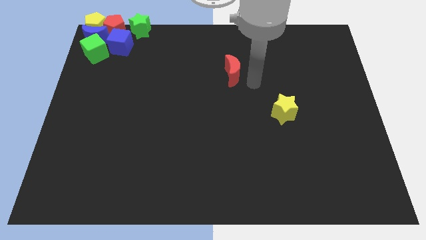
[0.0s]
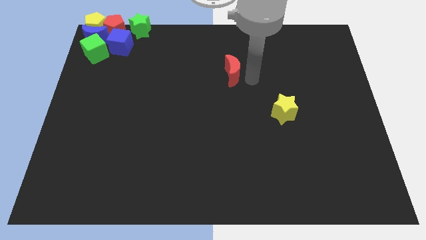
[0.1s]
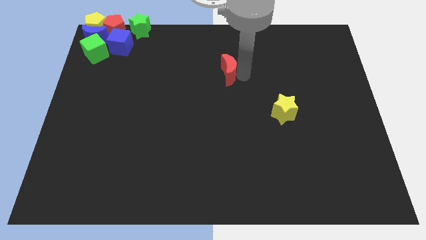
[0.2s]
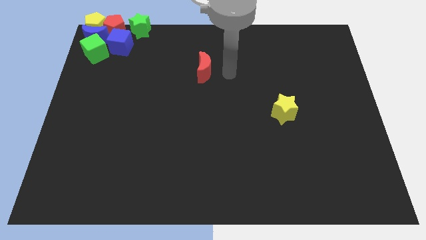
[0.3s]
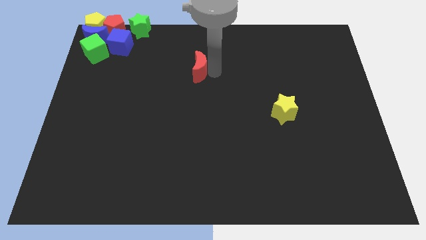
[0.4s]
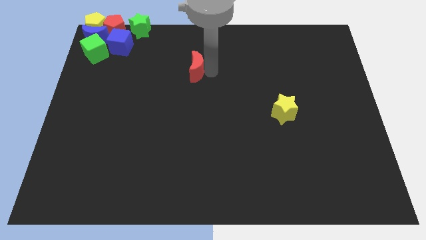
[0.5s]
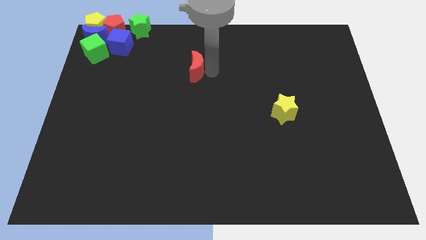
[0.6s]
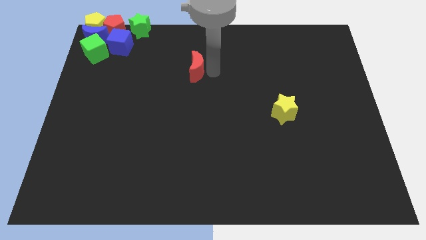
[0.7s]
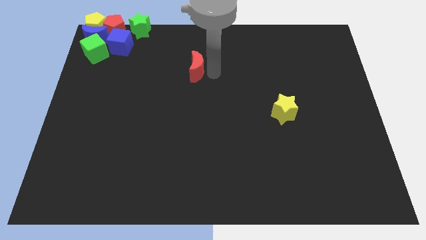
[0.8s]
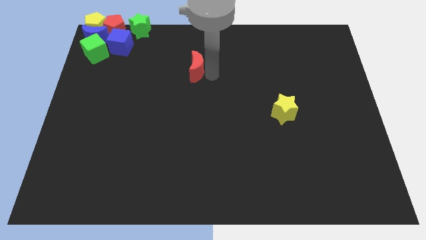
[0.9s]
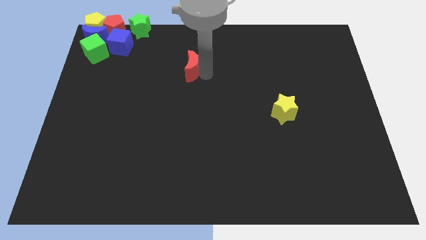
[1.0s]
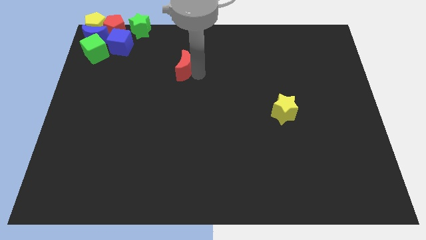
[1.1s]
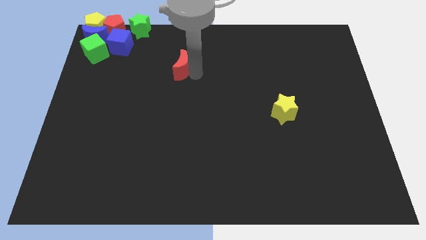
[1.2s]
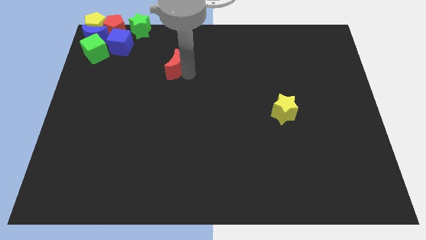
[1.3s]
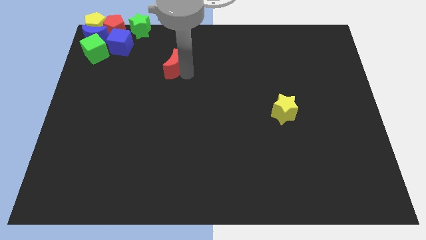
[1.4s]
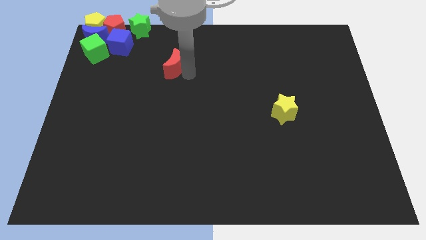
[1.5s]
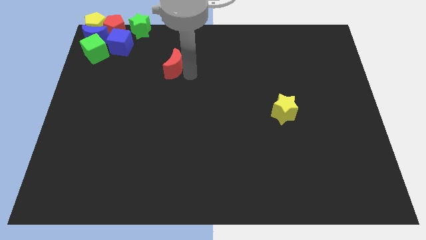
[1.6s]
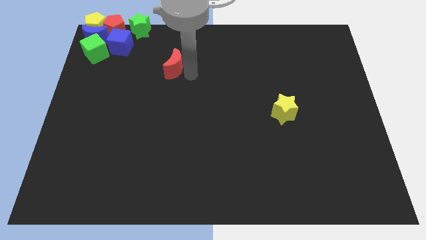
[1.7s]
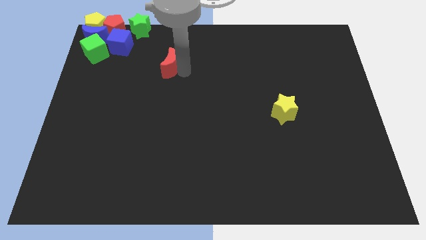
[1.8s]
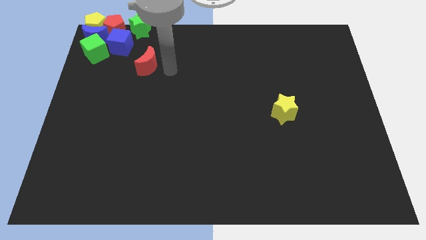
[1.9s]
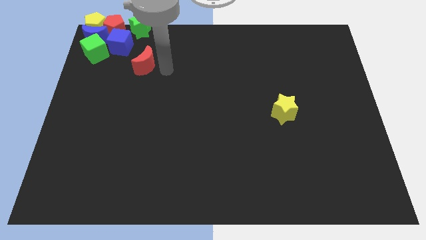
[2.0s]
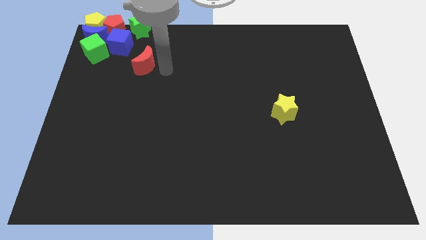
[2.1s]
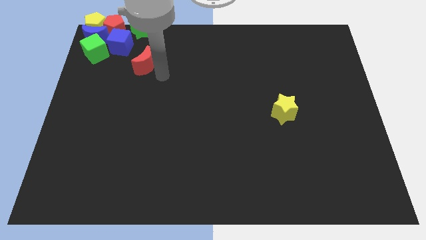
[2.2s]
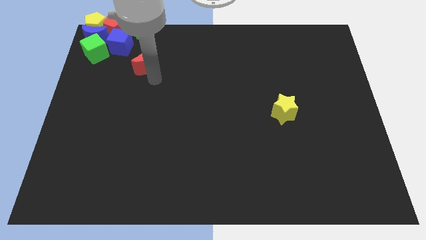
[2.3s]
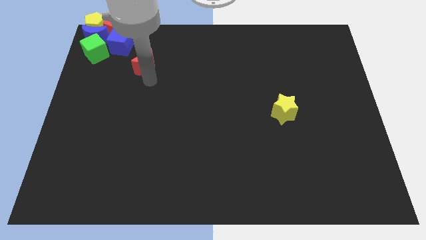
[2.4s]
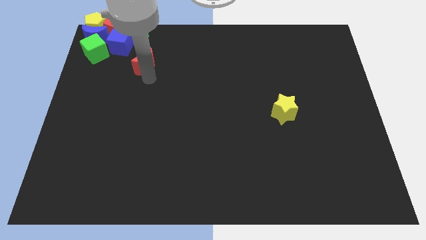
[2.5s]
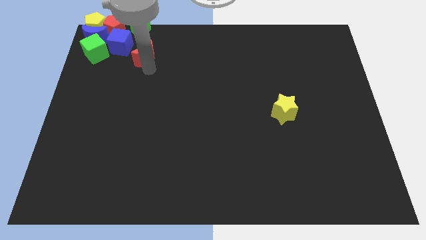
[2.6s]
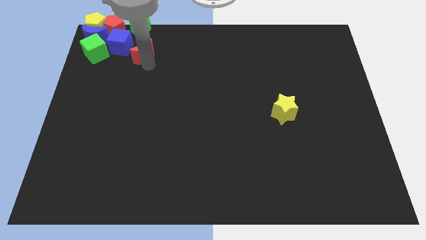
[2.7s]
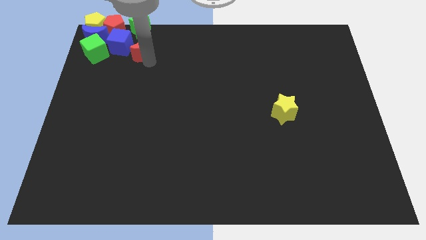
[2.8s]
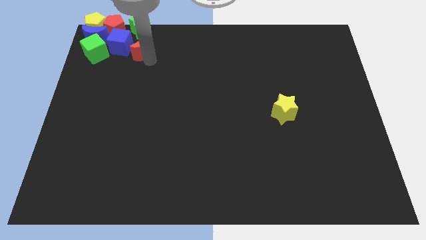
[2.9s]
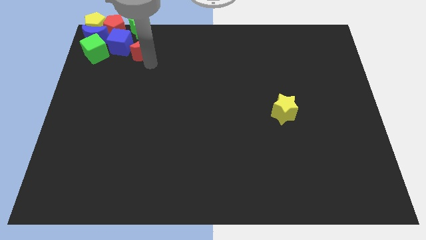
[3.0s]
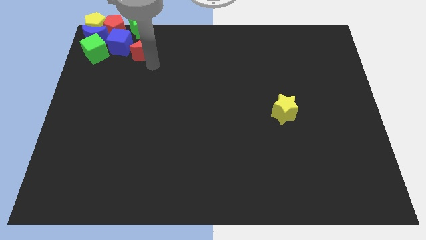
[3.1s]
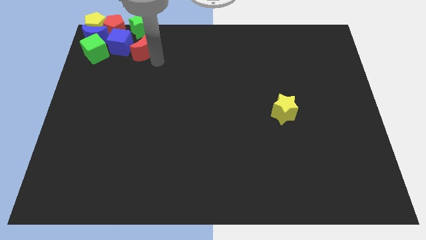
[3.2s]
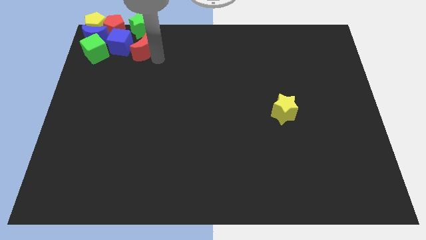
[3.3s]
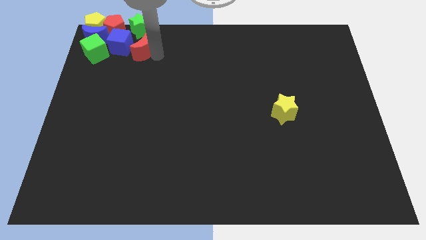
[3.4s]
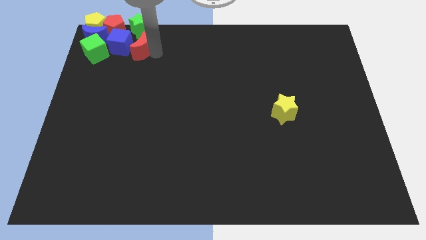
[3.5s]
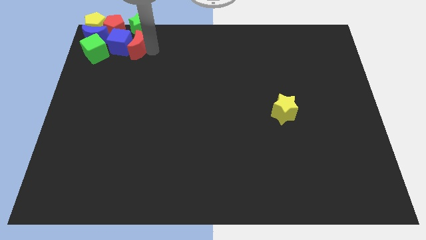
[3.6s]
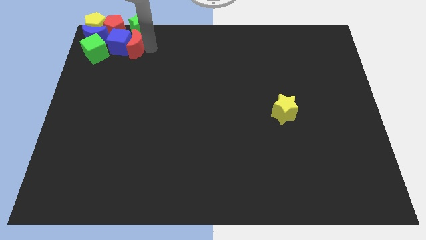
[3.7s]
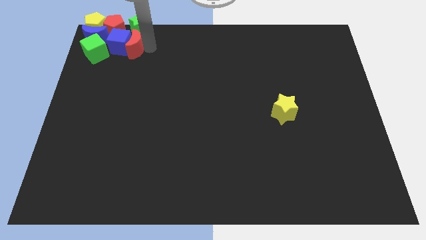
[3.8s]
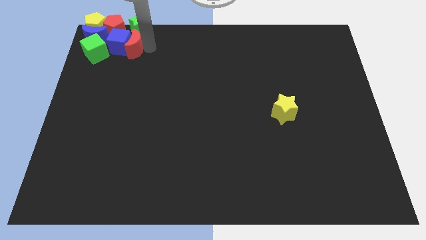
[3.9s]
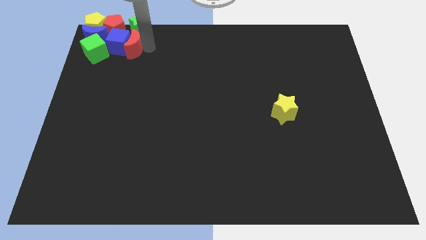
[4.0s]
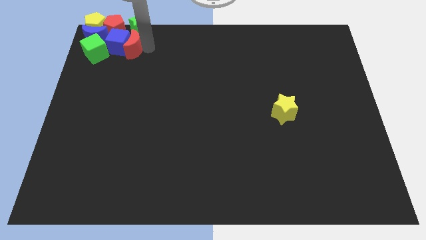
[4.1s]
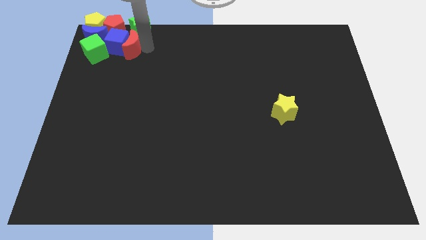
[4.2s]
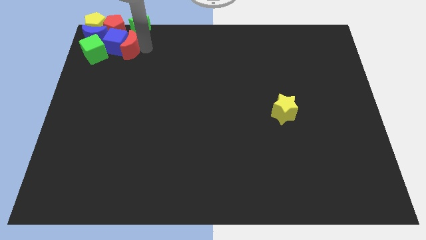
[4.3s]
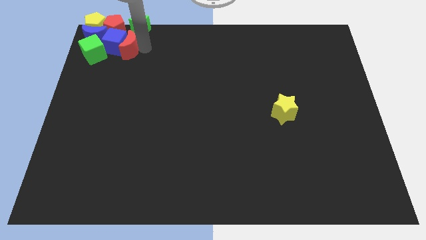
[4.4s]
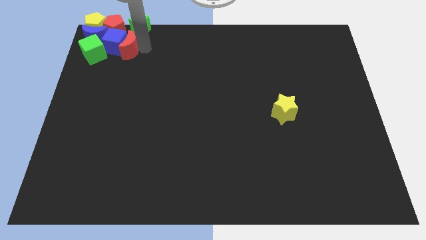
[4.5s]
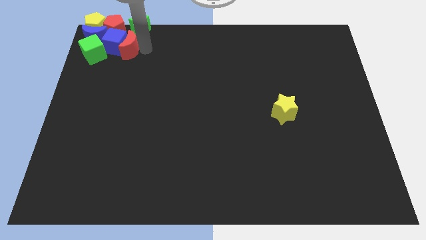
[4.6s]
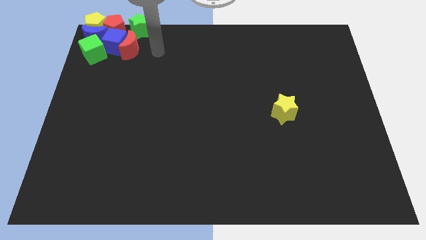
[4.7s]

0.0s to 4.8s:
move red moon into the blue cube

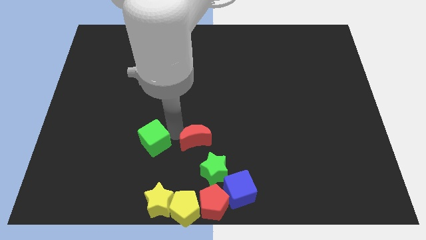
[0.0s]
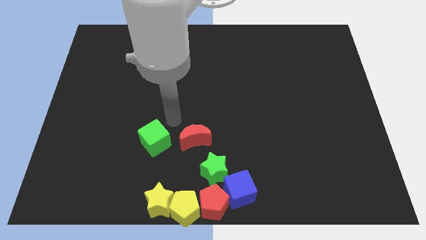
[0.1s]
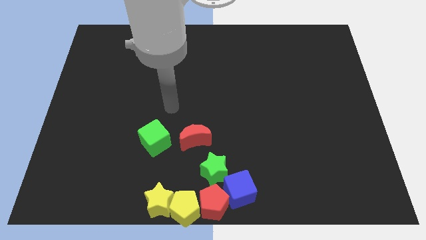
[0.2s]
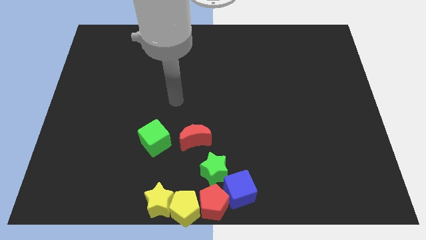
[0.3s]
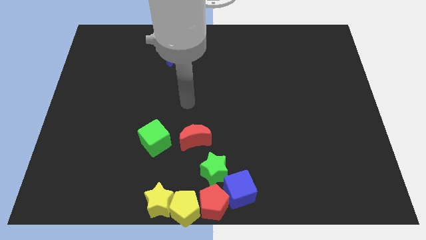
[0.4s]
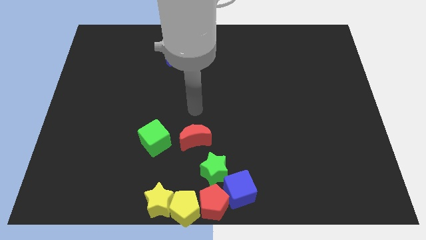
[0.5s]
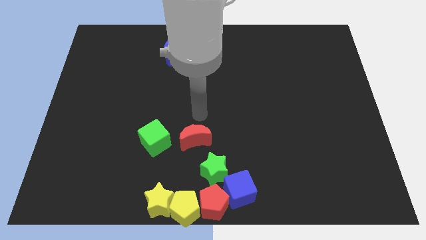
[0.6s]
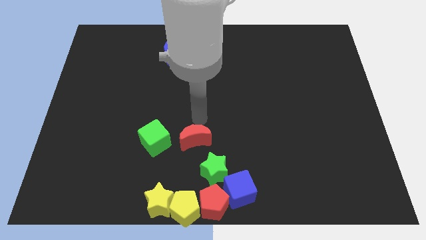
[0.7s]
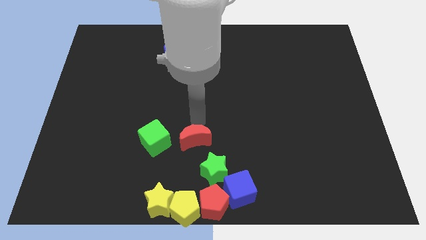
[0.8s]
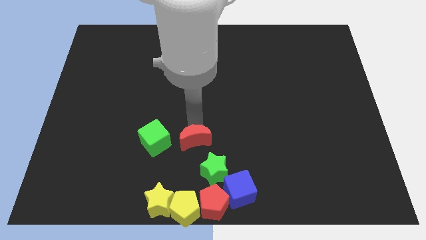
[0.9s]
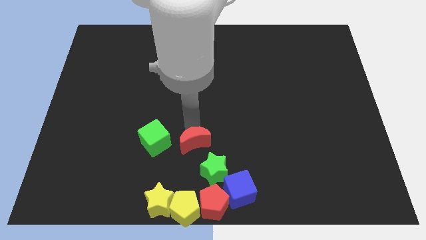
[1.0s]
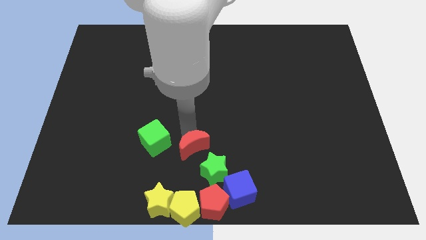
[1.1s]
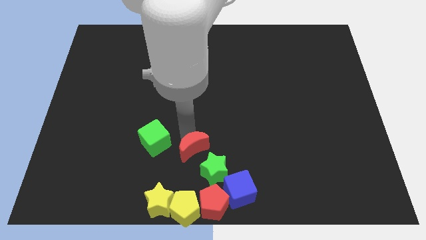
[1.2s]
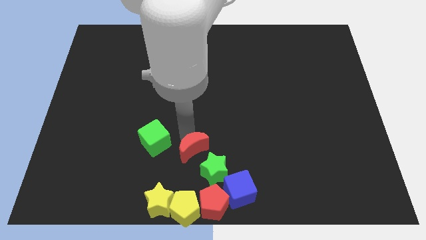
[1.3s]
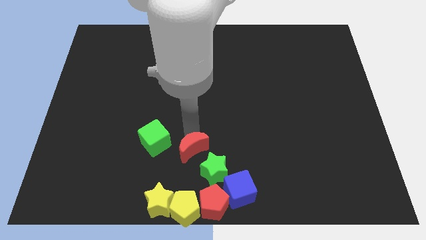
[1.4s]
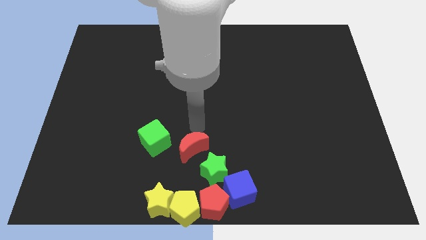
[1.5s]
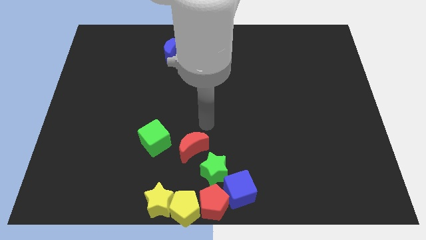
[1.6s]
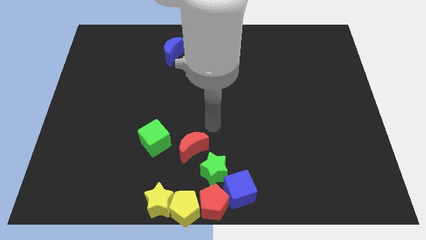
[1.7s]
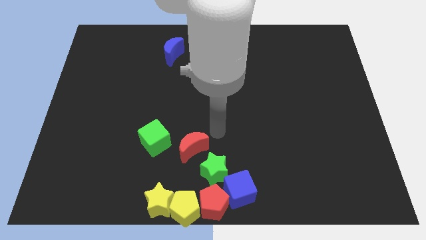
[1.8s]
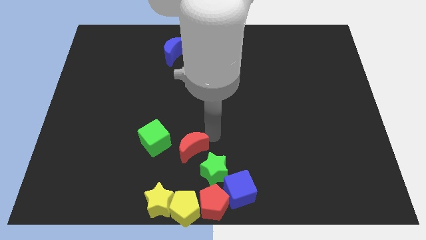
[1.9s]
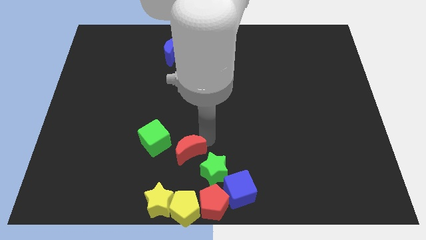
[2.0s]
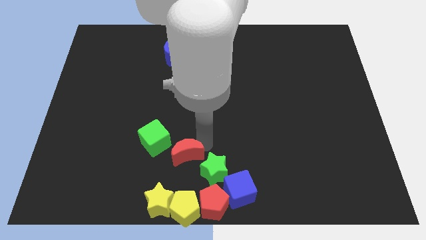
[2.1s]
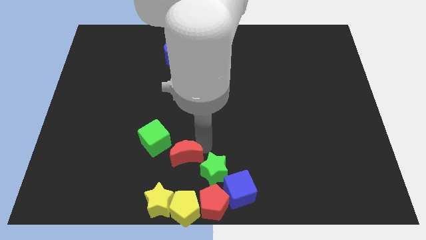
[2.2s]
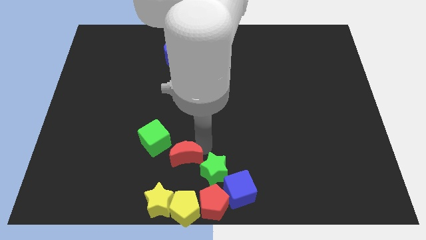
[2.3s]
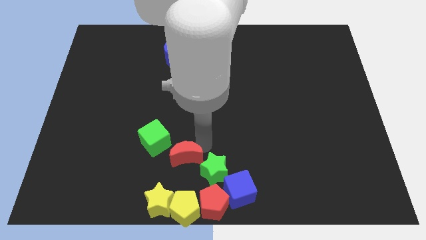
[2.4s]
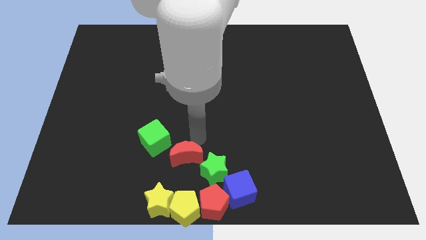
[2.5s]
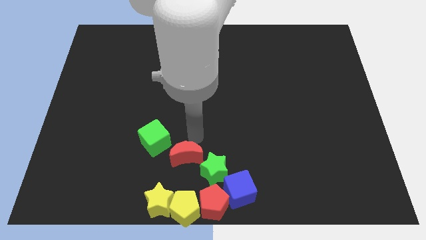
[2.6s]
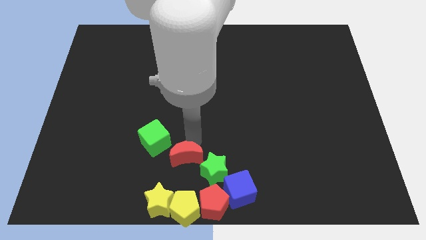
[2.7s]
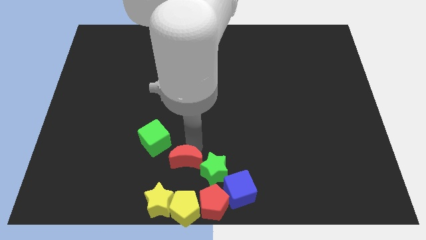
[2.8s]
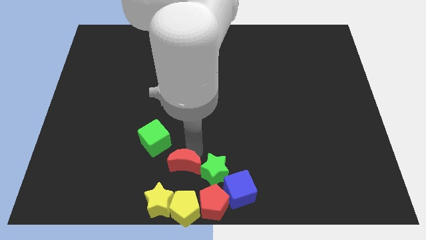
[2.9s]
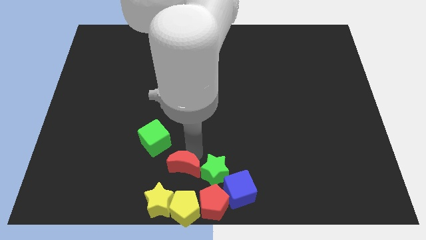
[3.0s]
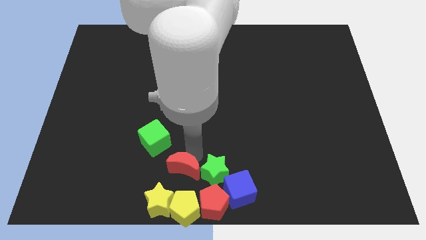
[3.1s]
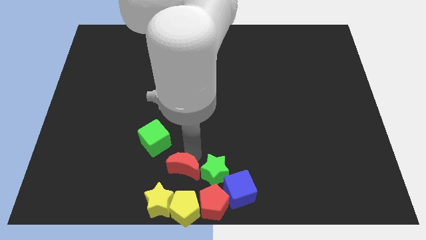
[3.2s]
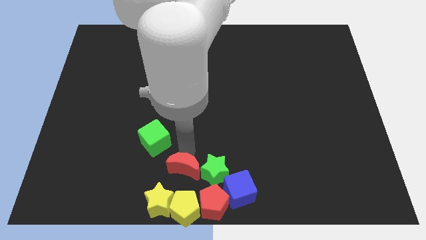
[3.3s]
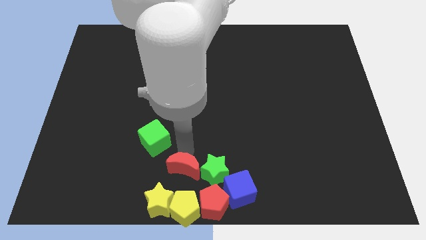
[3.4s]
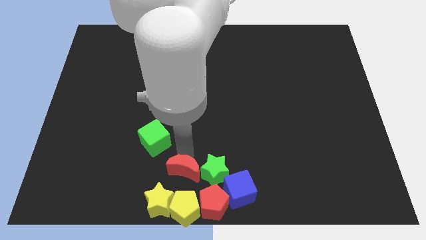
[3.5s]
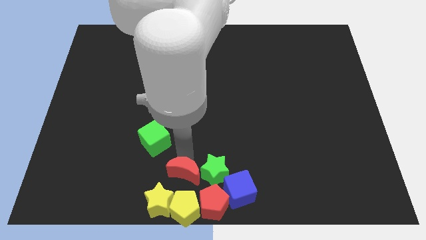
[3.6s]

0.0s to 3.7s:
push the red crescent left to the green cube

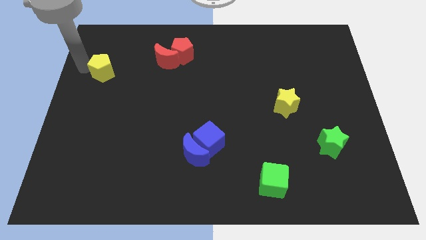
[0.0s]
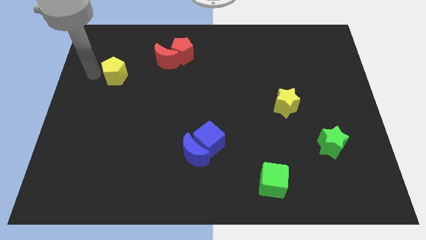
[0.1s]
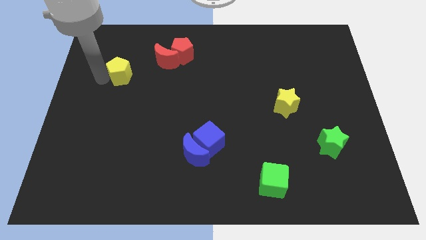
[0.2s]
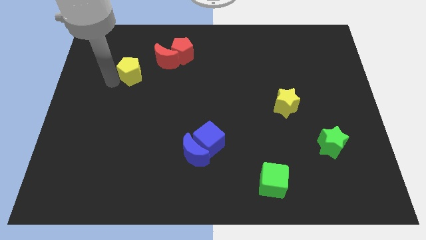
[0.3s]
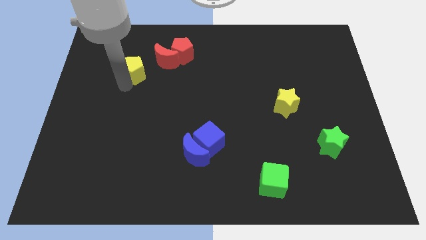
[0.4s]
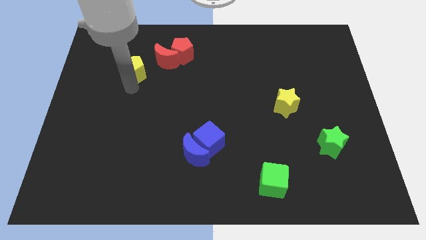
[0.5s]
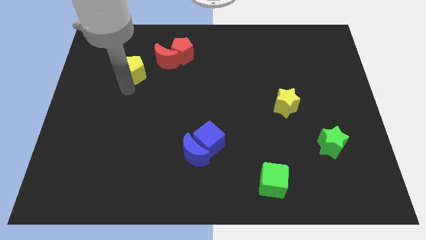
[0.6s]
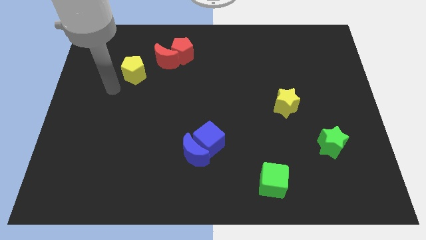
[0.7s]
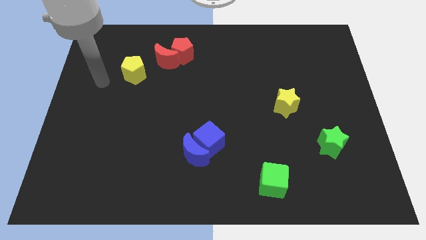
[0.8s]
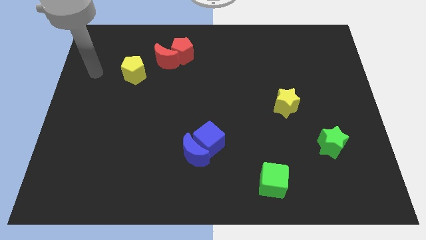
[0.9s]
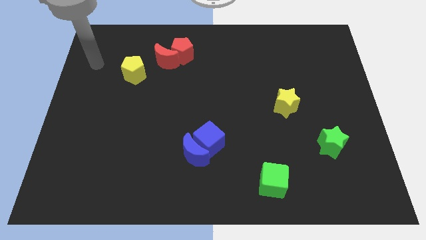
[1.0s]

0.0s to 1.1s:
slide yellow pentagon towards red moon
